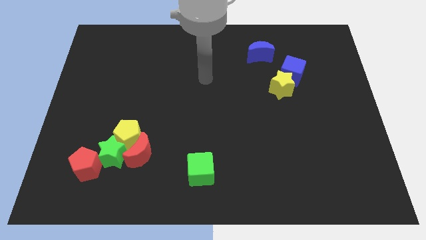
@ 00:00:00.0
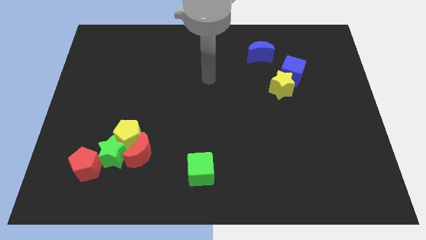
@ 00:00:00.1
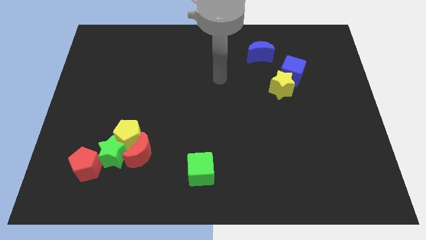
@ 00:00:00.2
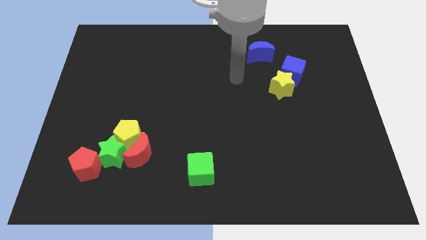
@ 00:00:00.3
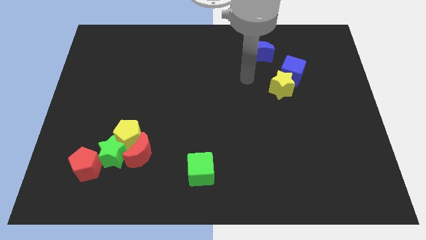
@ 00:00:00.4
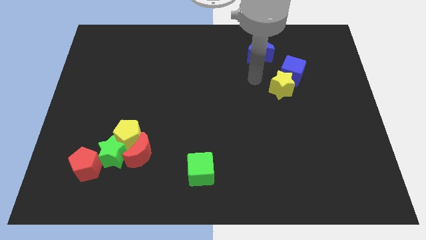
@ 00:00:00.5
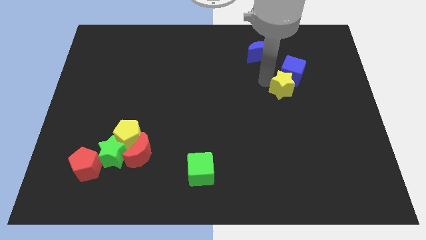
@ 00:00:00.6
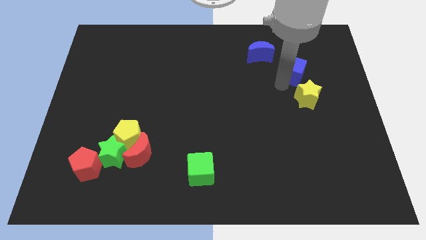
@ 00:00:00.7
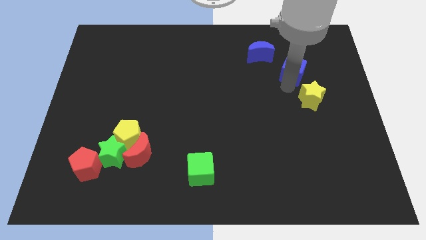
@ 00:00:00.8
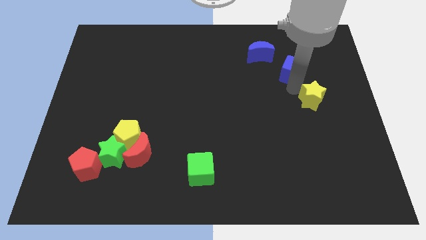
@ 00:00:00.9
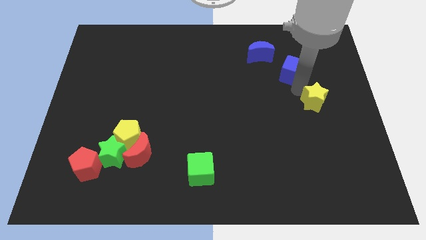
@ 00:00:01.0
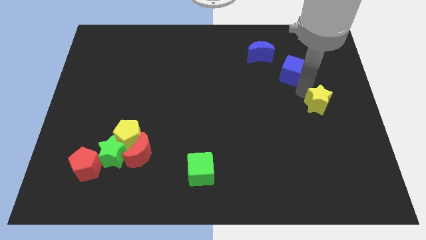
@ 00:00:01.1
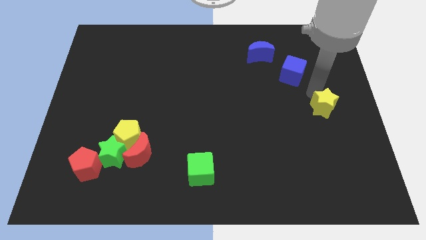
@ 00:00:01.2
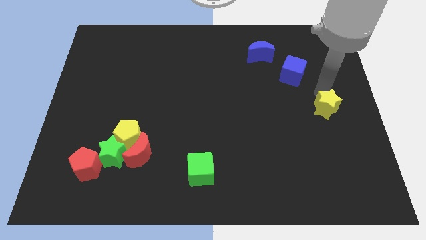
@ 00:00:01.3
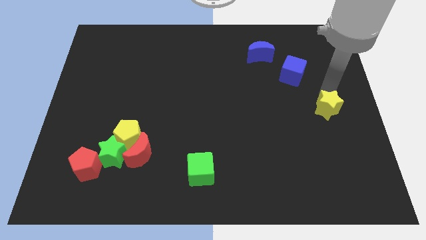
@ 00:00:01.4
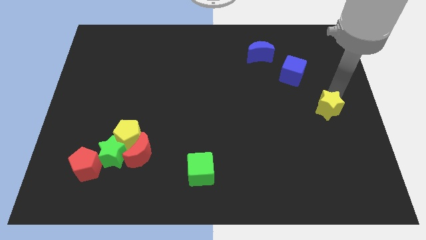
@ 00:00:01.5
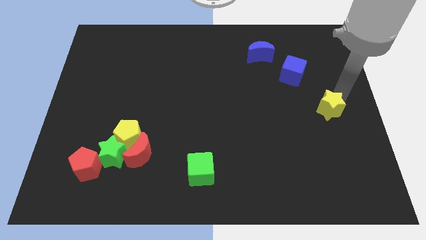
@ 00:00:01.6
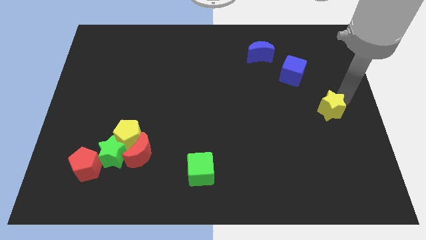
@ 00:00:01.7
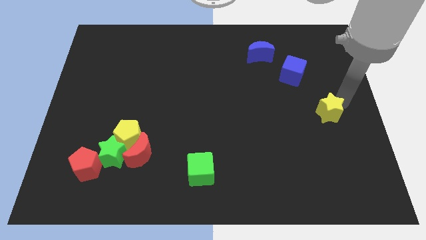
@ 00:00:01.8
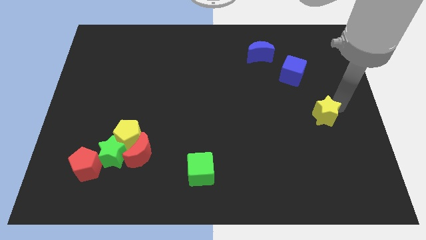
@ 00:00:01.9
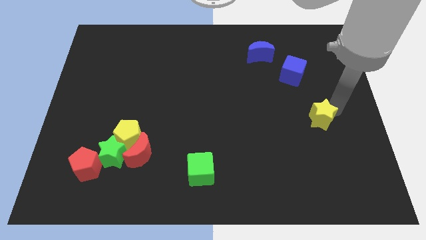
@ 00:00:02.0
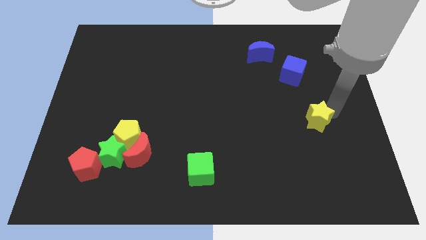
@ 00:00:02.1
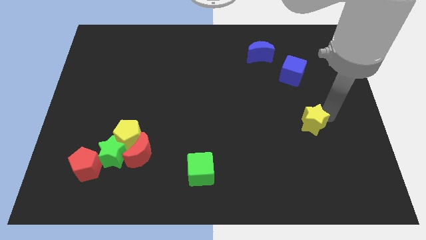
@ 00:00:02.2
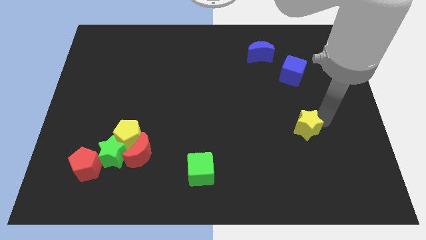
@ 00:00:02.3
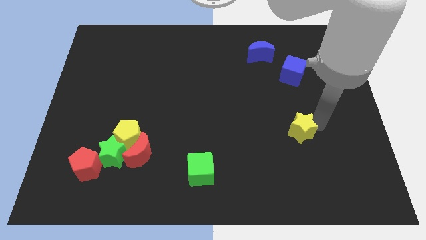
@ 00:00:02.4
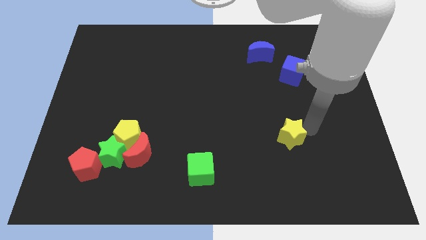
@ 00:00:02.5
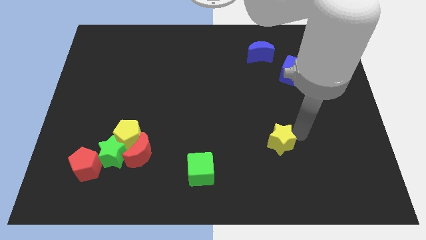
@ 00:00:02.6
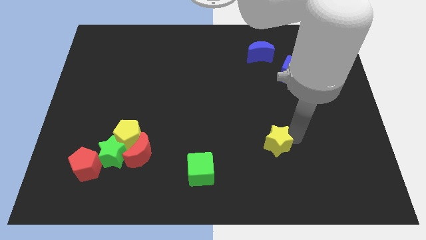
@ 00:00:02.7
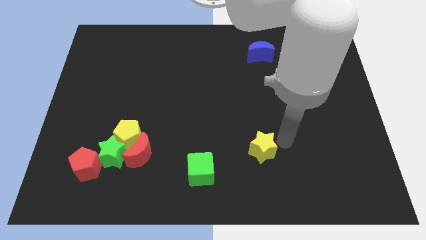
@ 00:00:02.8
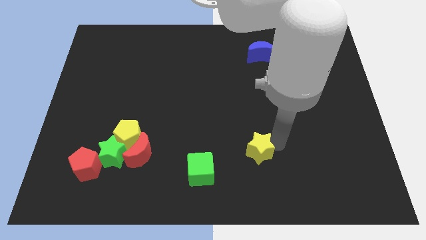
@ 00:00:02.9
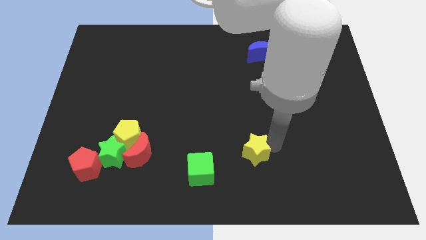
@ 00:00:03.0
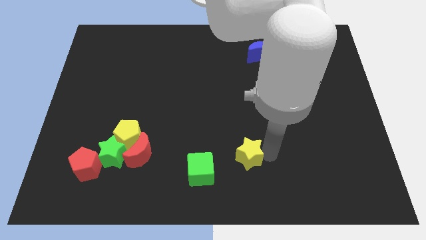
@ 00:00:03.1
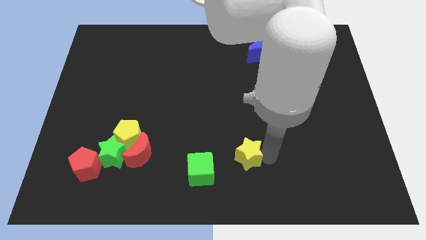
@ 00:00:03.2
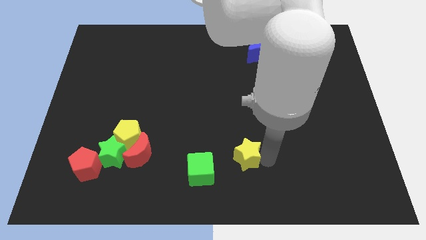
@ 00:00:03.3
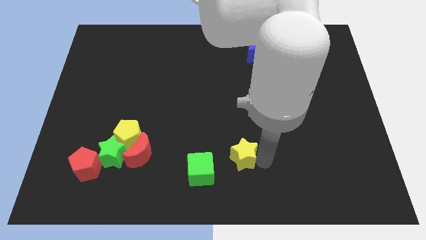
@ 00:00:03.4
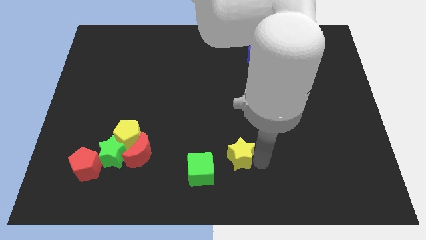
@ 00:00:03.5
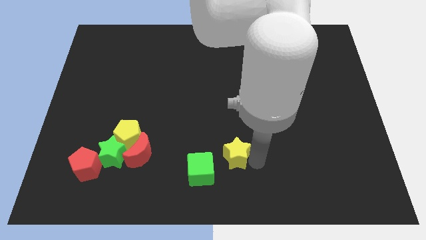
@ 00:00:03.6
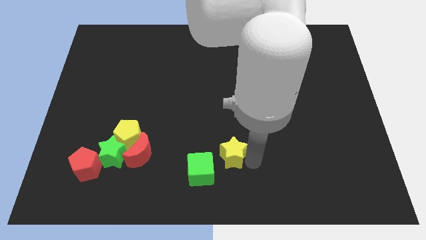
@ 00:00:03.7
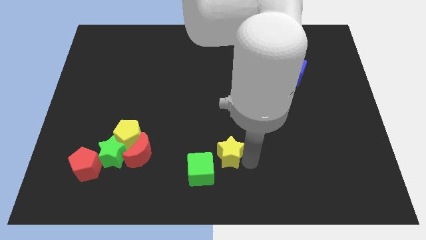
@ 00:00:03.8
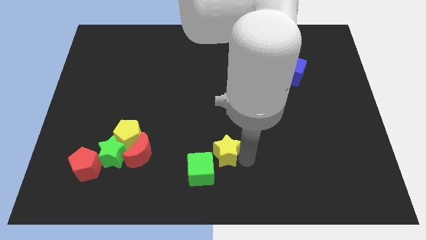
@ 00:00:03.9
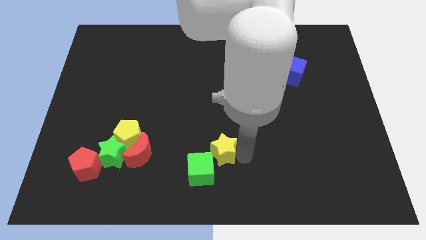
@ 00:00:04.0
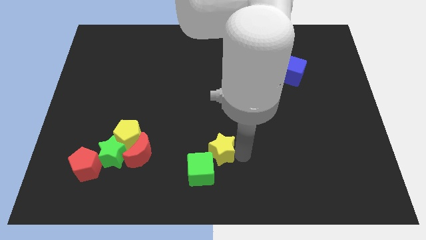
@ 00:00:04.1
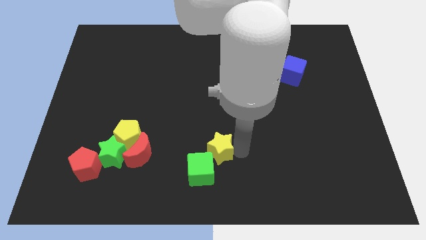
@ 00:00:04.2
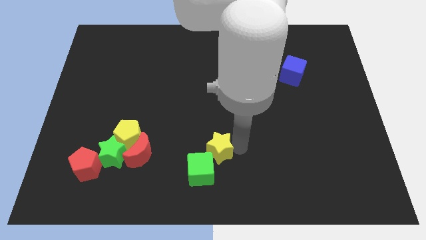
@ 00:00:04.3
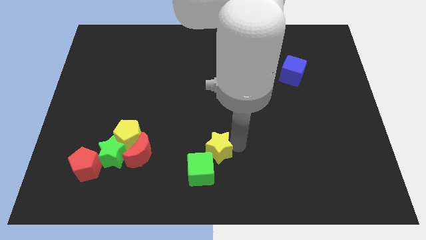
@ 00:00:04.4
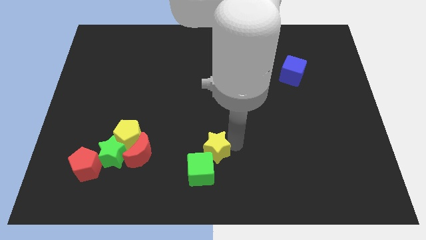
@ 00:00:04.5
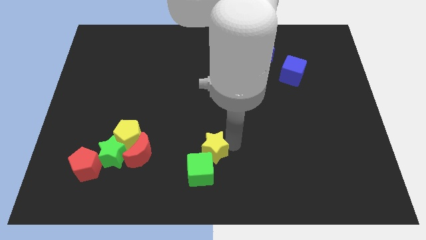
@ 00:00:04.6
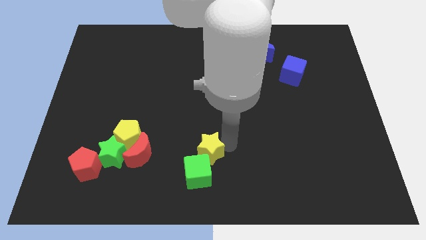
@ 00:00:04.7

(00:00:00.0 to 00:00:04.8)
put the yellow star towards the green cube

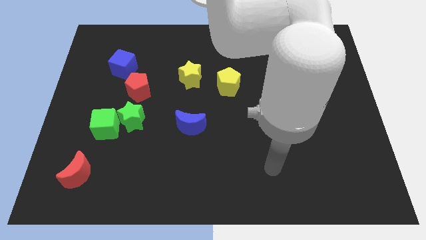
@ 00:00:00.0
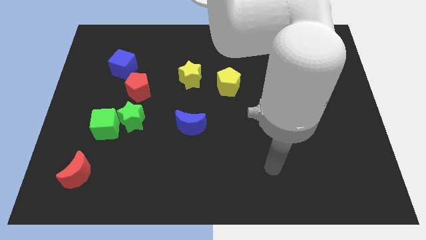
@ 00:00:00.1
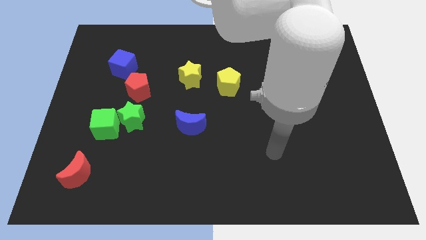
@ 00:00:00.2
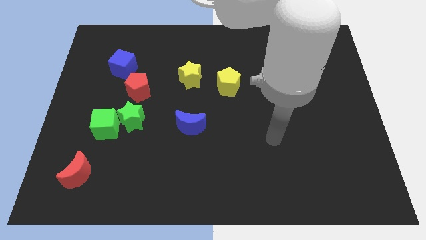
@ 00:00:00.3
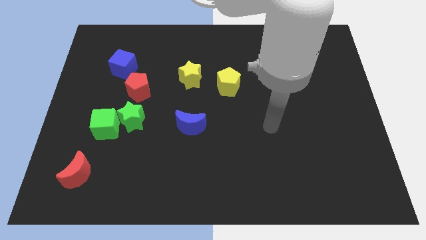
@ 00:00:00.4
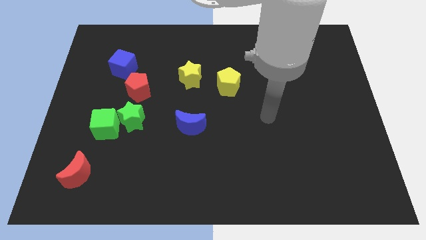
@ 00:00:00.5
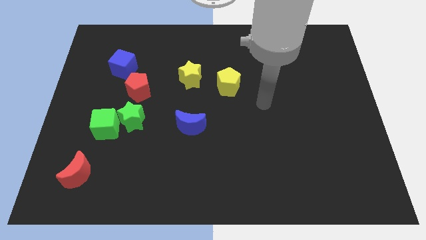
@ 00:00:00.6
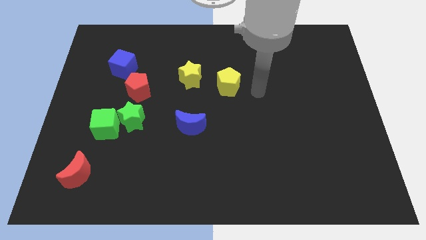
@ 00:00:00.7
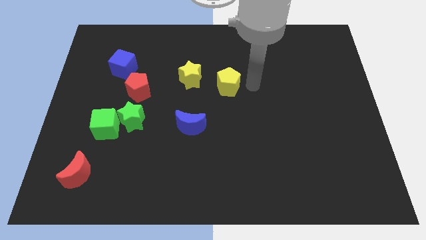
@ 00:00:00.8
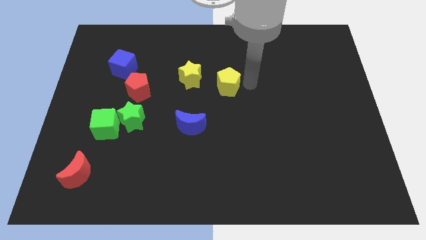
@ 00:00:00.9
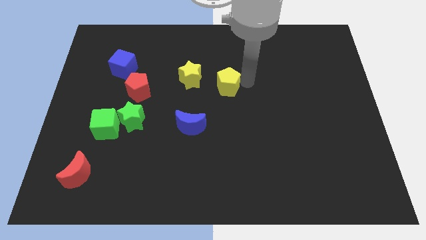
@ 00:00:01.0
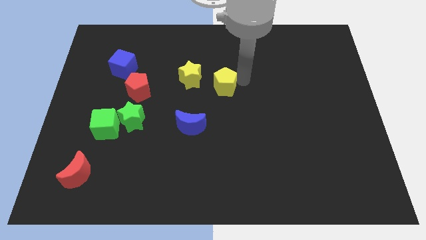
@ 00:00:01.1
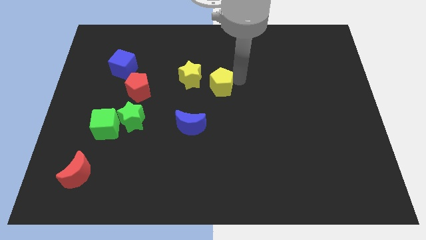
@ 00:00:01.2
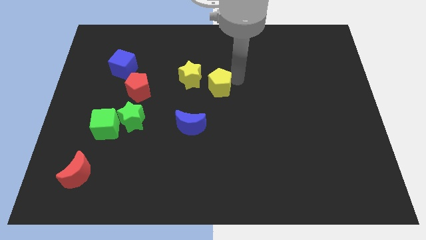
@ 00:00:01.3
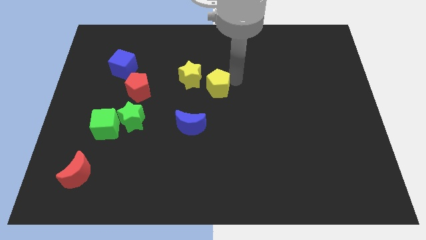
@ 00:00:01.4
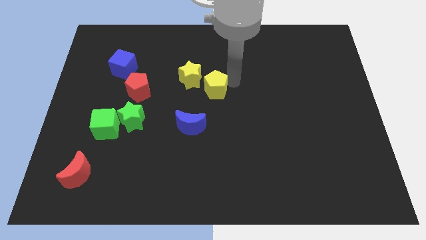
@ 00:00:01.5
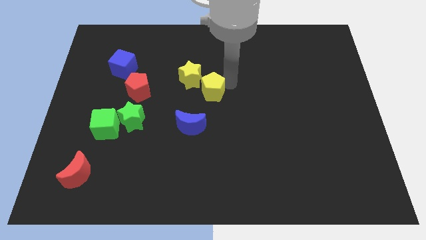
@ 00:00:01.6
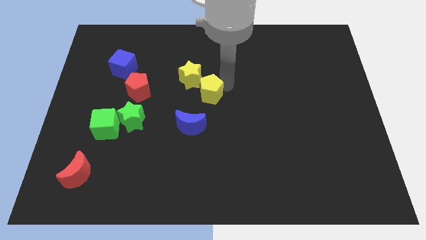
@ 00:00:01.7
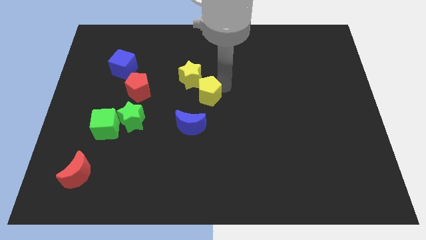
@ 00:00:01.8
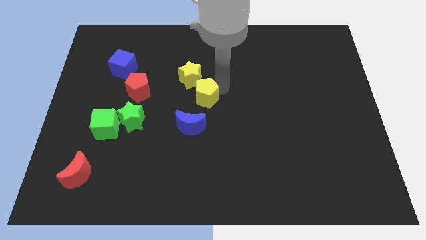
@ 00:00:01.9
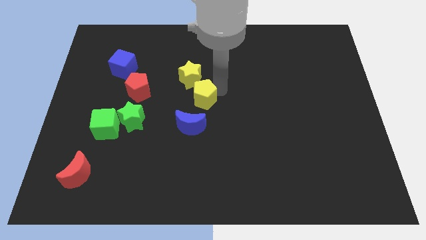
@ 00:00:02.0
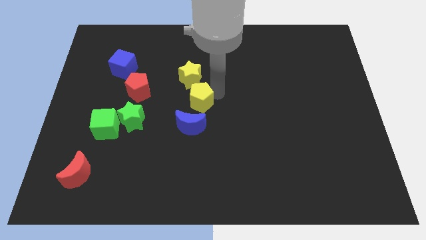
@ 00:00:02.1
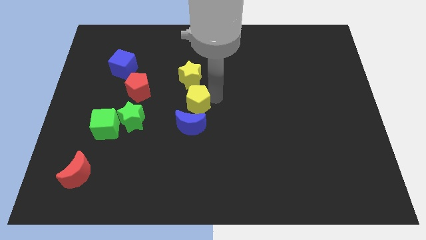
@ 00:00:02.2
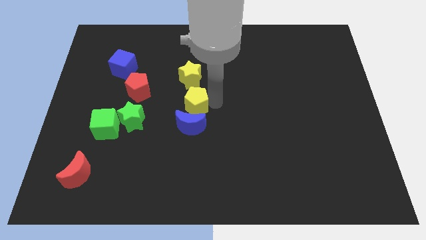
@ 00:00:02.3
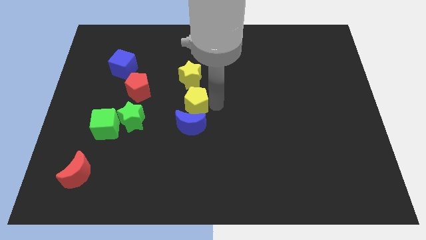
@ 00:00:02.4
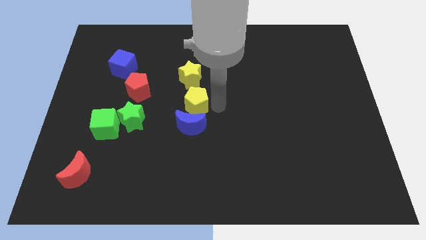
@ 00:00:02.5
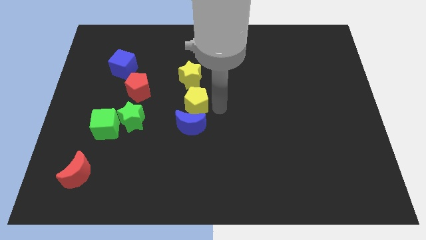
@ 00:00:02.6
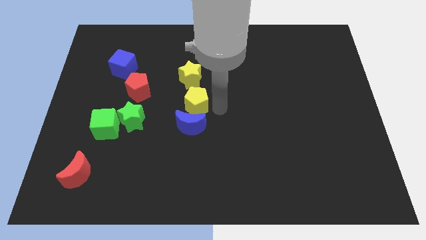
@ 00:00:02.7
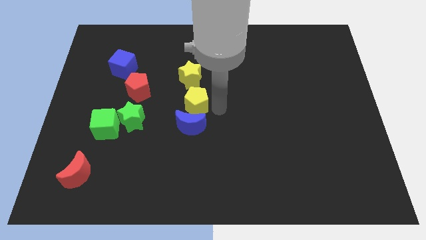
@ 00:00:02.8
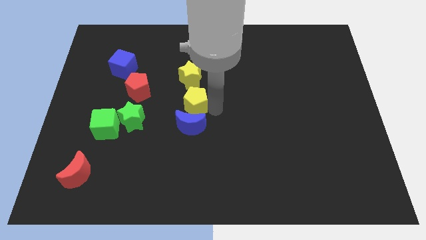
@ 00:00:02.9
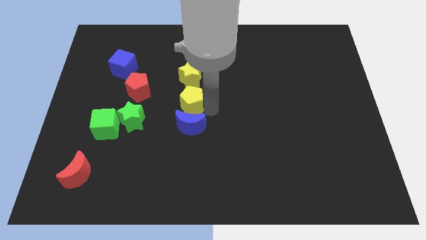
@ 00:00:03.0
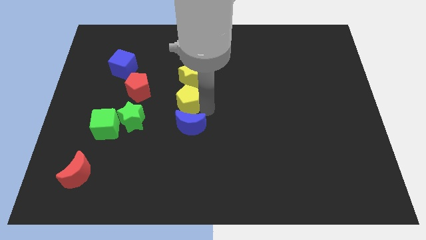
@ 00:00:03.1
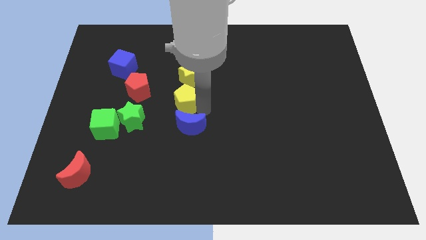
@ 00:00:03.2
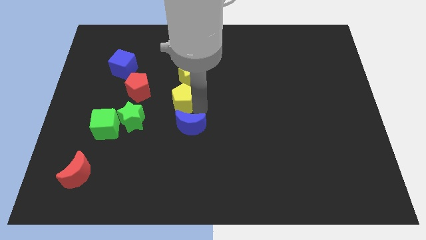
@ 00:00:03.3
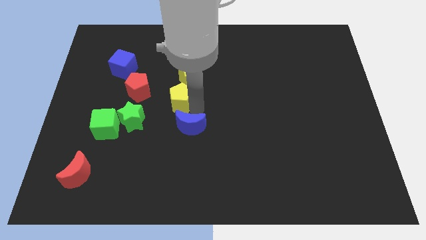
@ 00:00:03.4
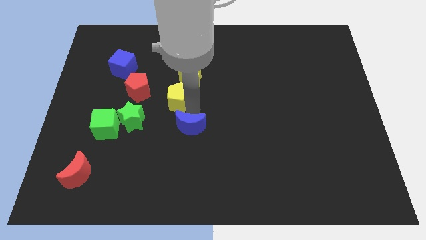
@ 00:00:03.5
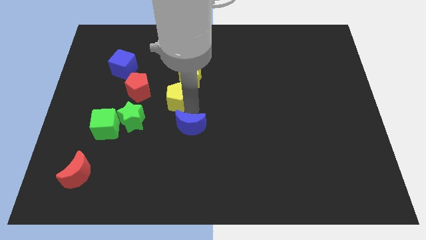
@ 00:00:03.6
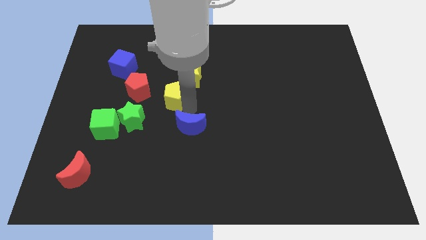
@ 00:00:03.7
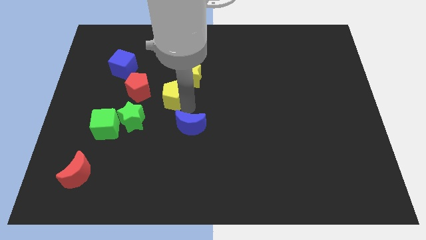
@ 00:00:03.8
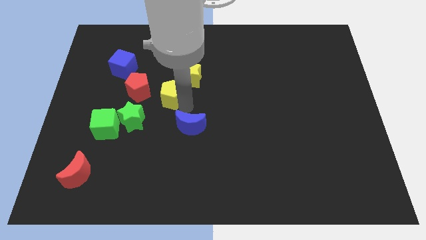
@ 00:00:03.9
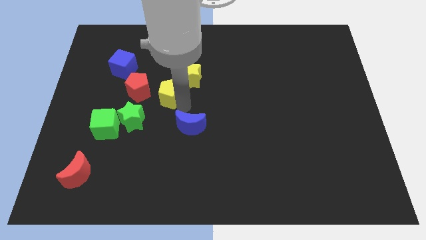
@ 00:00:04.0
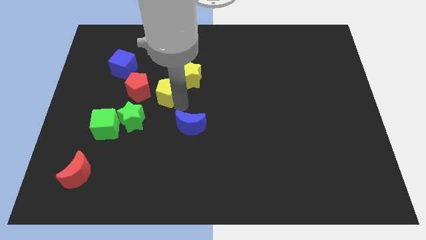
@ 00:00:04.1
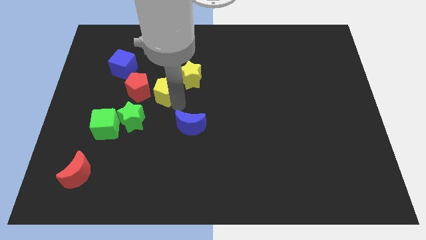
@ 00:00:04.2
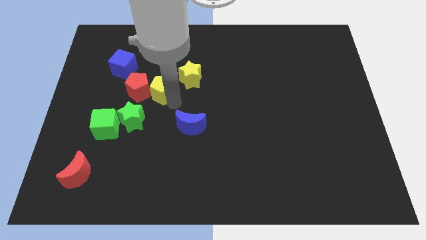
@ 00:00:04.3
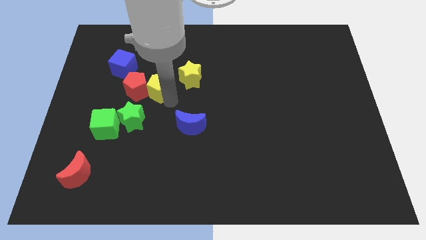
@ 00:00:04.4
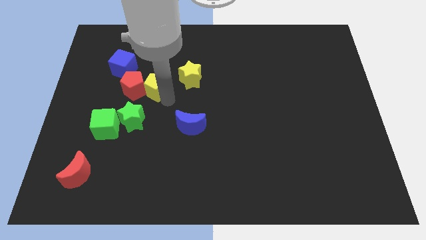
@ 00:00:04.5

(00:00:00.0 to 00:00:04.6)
move the yellow pentagon next to the red pentagon
